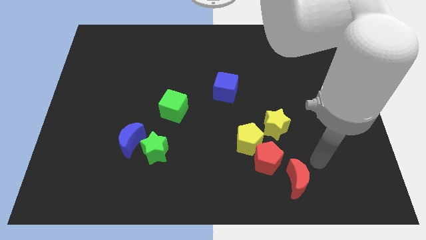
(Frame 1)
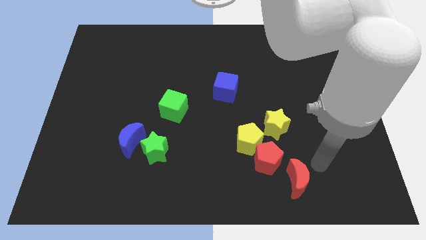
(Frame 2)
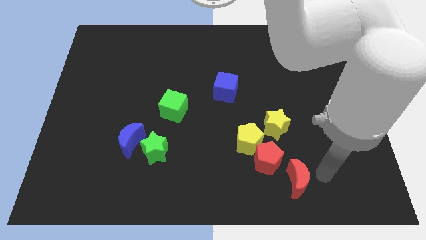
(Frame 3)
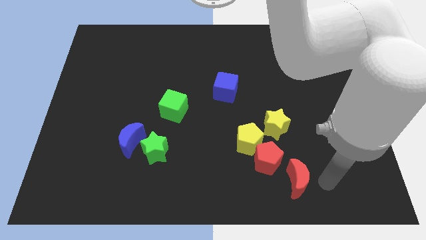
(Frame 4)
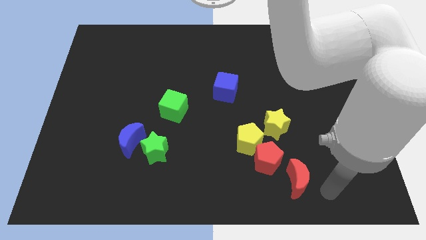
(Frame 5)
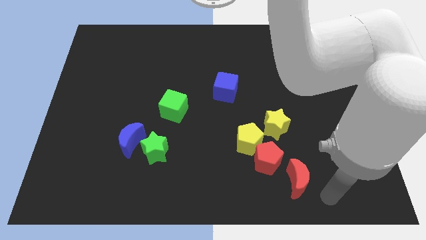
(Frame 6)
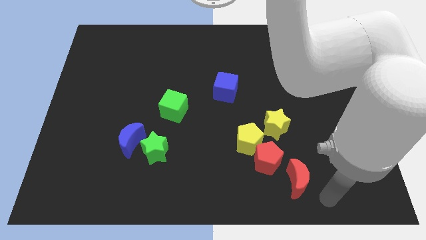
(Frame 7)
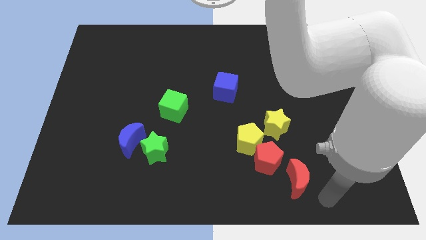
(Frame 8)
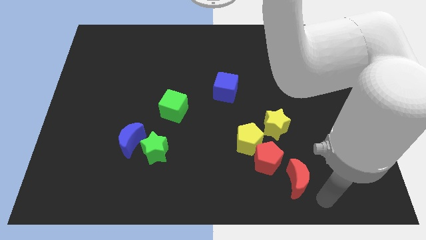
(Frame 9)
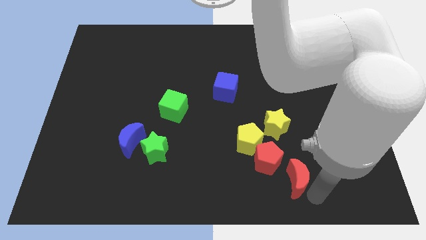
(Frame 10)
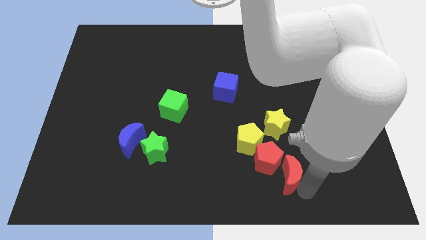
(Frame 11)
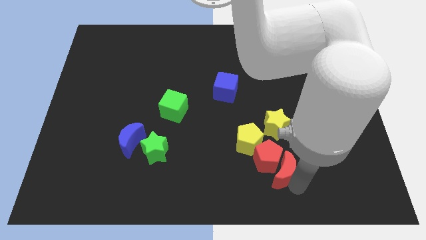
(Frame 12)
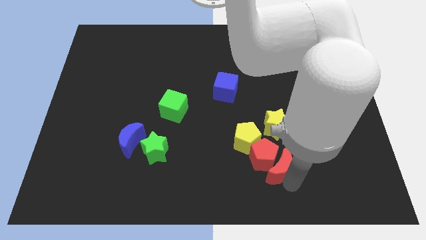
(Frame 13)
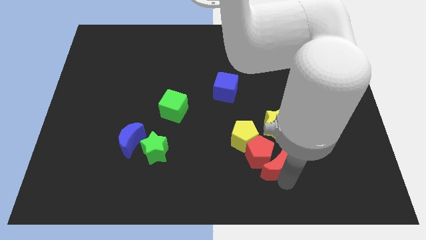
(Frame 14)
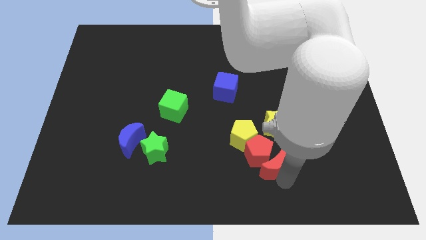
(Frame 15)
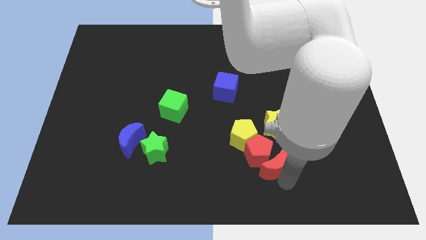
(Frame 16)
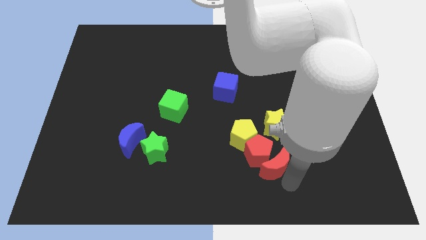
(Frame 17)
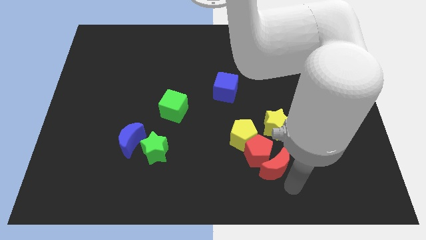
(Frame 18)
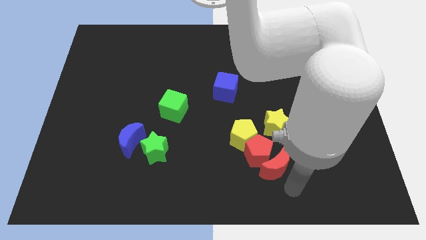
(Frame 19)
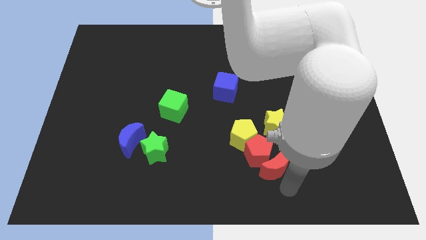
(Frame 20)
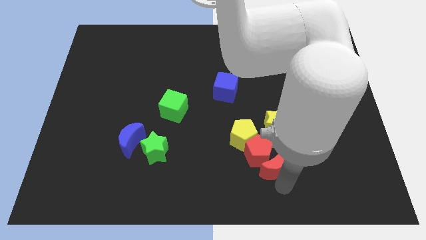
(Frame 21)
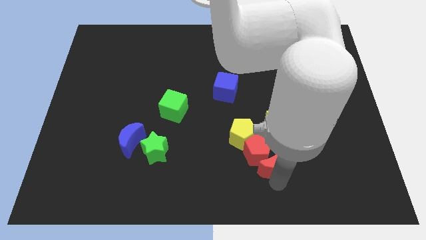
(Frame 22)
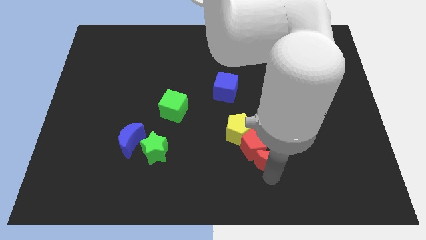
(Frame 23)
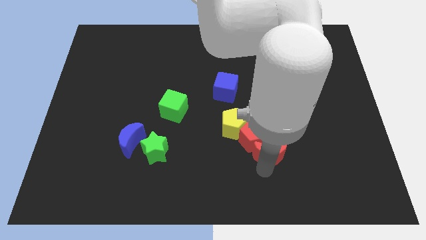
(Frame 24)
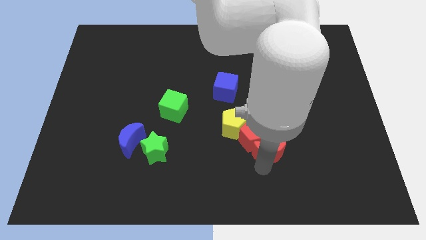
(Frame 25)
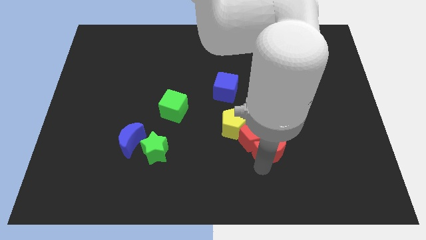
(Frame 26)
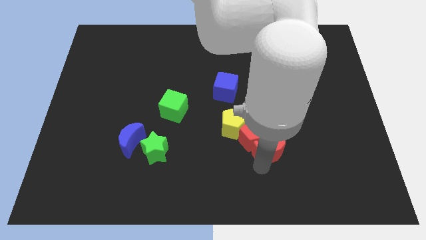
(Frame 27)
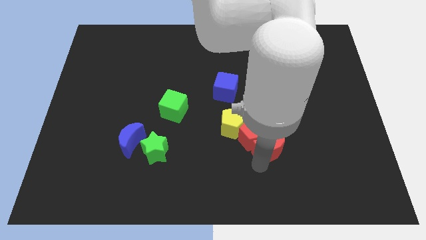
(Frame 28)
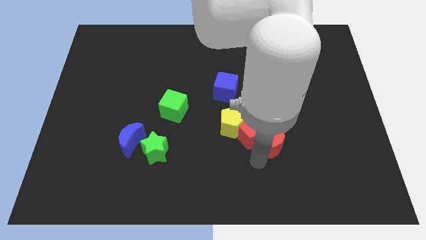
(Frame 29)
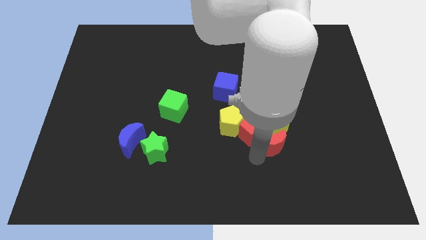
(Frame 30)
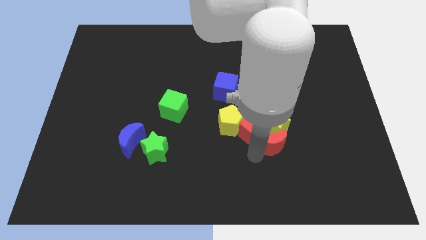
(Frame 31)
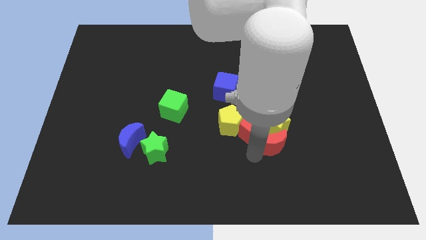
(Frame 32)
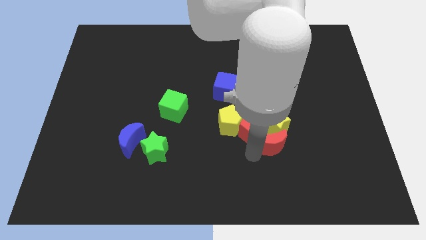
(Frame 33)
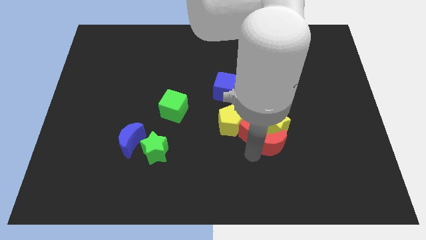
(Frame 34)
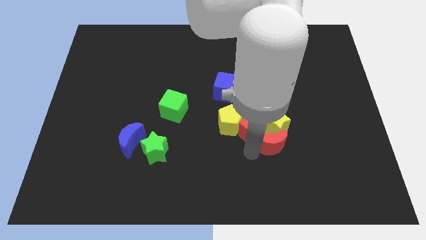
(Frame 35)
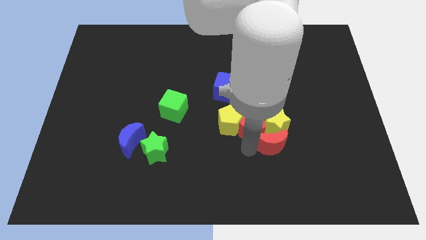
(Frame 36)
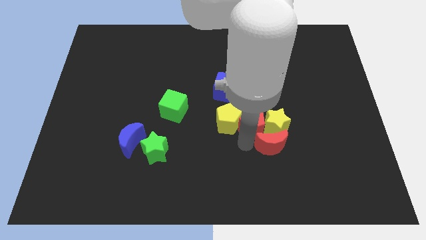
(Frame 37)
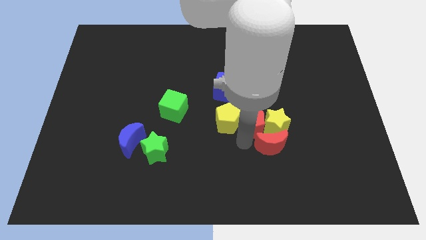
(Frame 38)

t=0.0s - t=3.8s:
push the red blocks between yellow blocks

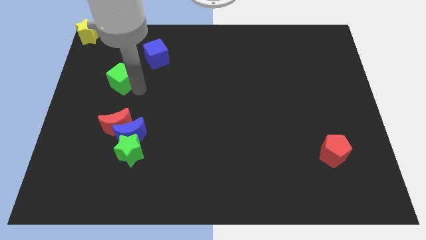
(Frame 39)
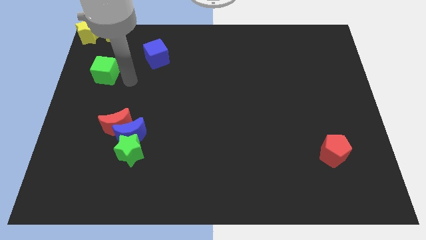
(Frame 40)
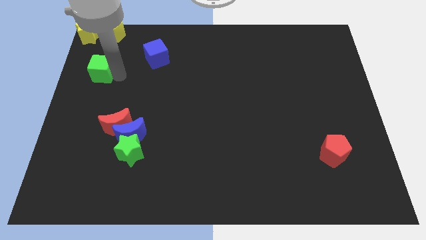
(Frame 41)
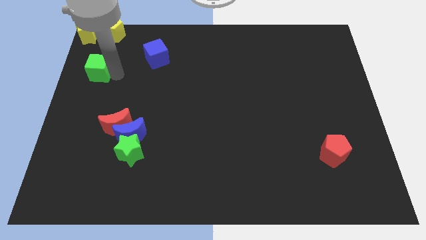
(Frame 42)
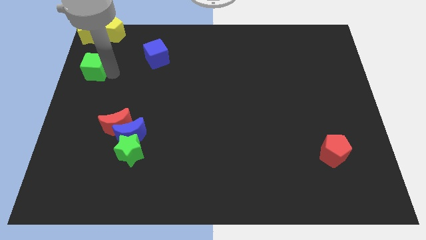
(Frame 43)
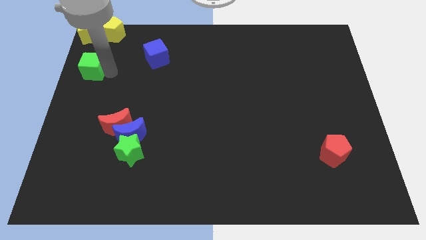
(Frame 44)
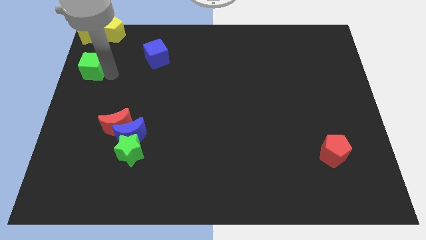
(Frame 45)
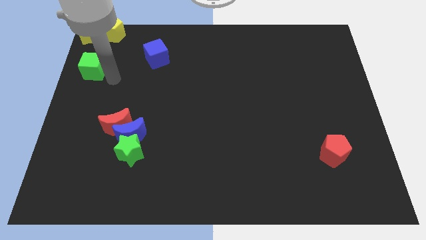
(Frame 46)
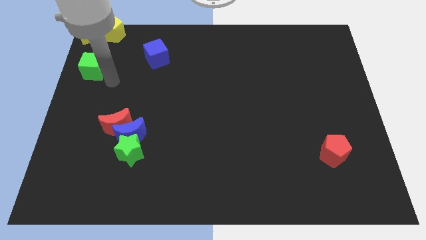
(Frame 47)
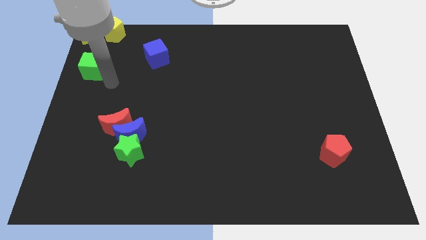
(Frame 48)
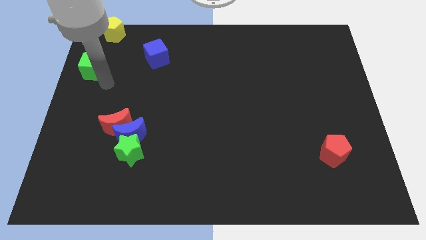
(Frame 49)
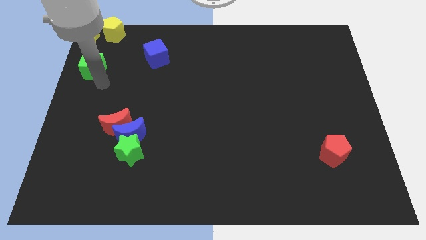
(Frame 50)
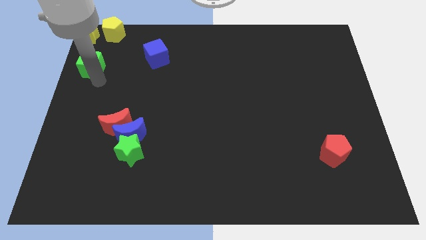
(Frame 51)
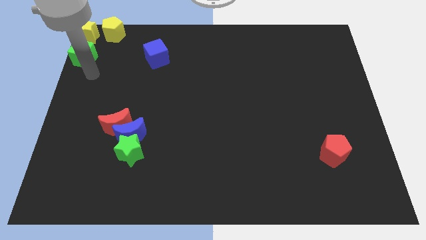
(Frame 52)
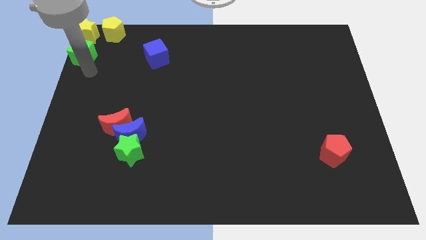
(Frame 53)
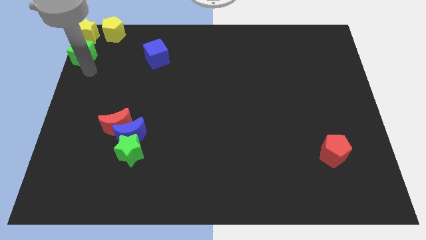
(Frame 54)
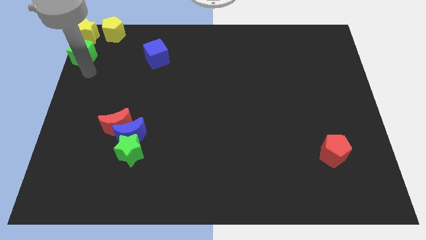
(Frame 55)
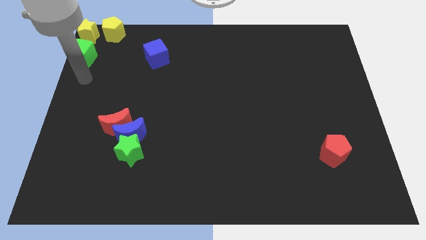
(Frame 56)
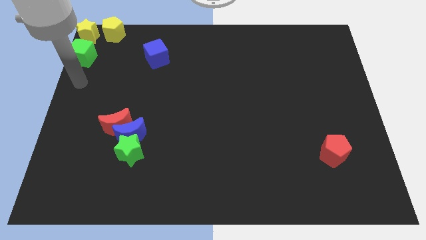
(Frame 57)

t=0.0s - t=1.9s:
move the green cube close to the yellow star

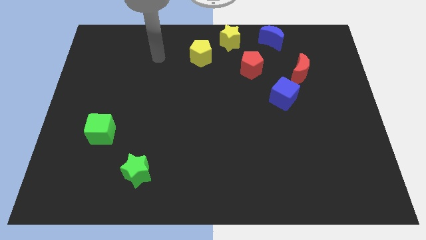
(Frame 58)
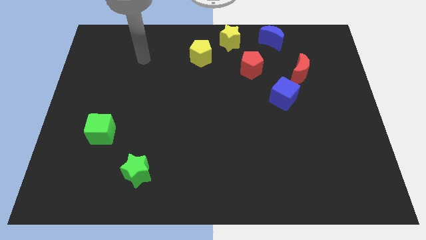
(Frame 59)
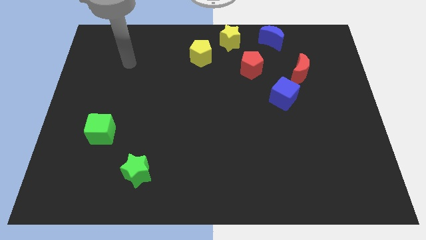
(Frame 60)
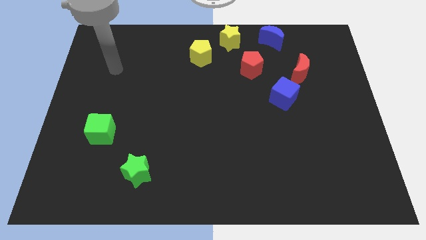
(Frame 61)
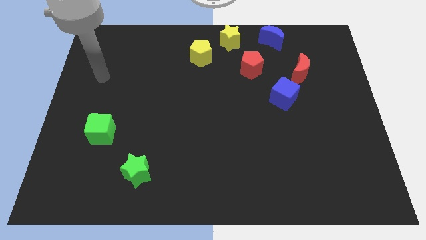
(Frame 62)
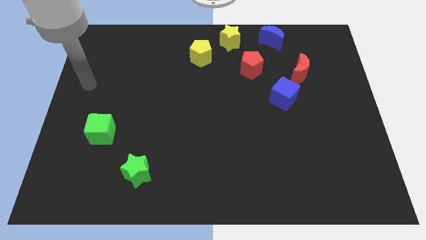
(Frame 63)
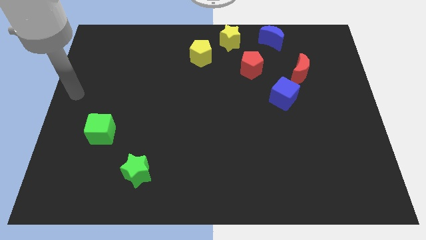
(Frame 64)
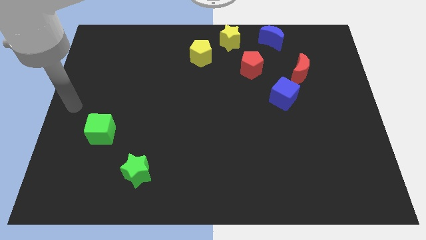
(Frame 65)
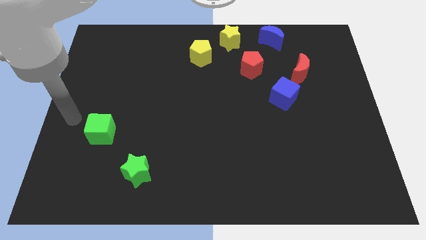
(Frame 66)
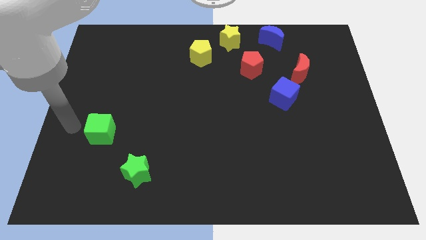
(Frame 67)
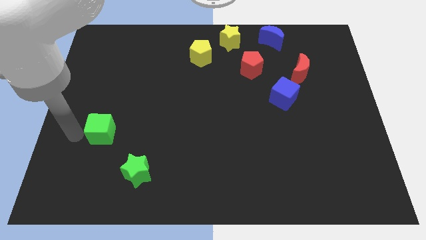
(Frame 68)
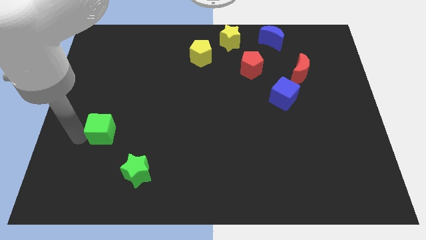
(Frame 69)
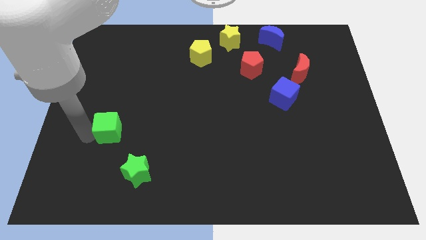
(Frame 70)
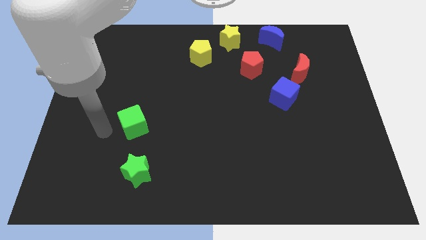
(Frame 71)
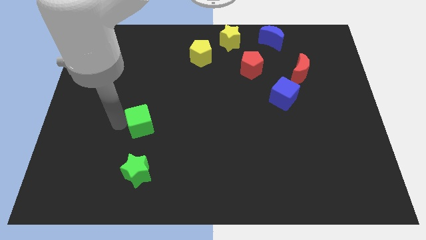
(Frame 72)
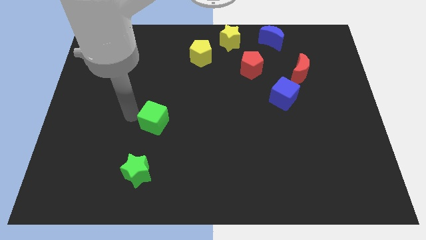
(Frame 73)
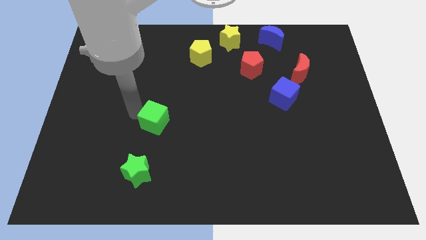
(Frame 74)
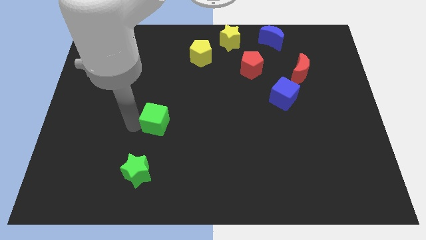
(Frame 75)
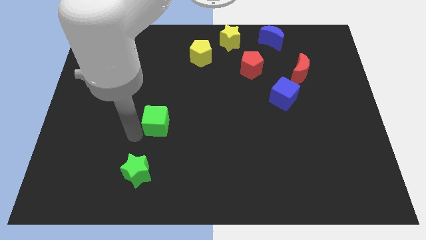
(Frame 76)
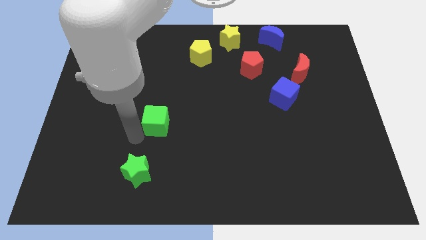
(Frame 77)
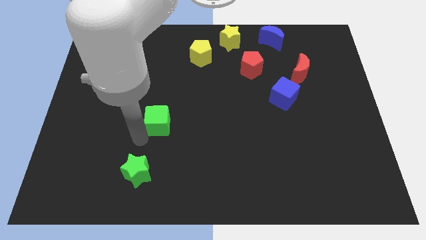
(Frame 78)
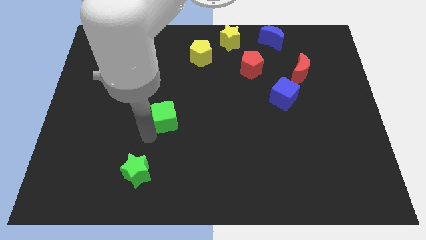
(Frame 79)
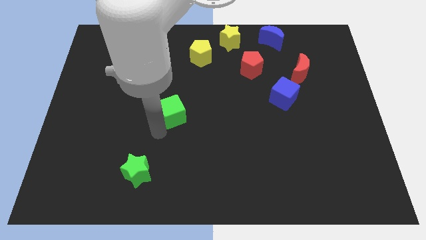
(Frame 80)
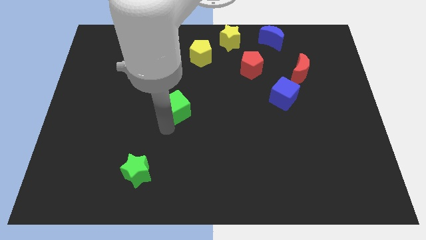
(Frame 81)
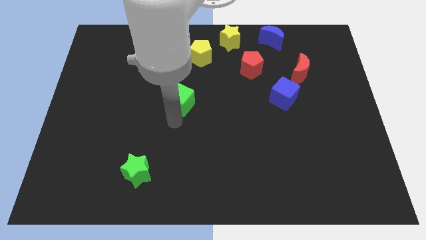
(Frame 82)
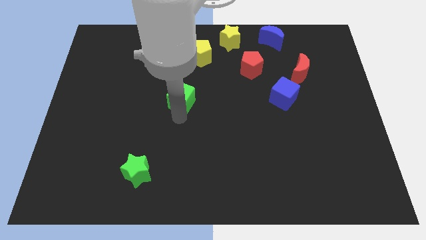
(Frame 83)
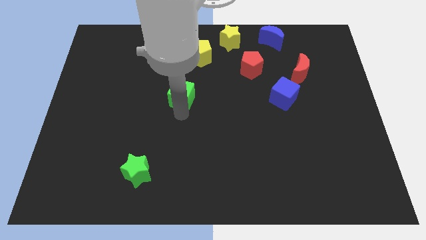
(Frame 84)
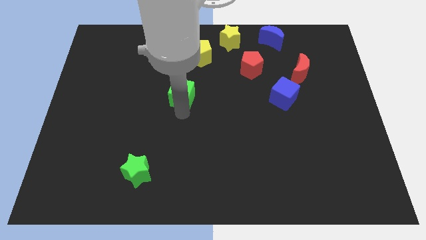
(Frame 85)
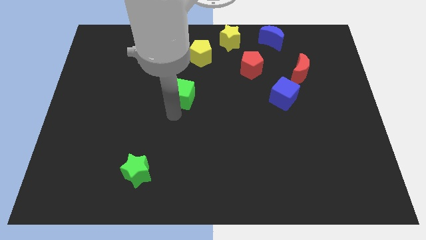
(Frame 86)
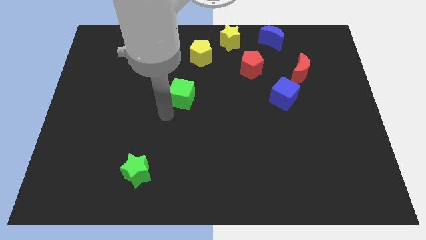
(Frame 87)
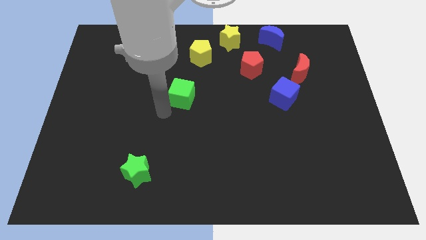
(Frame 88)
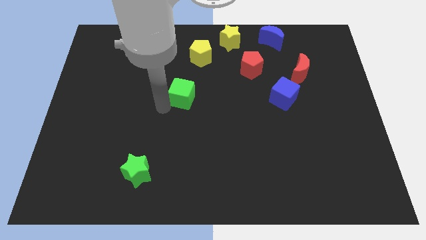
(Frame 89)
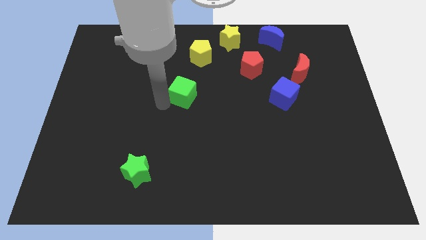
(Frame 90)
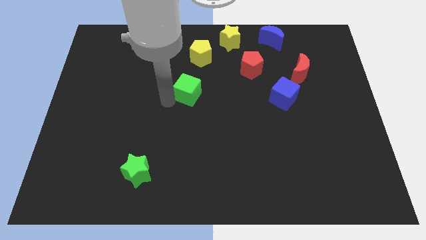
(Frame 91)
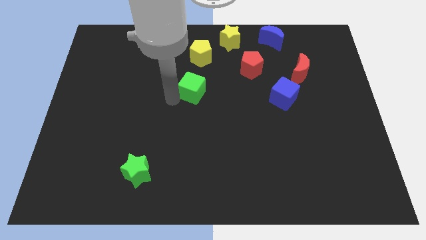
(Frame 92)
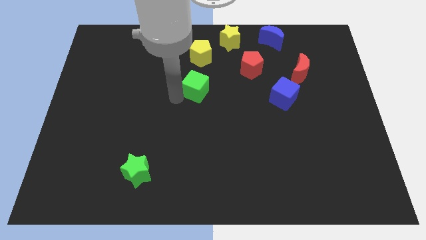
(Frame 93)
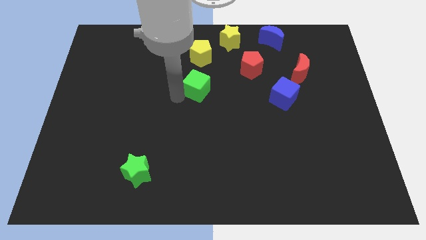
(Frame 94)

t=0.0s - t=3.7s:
move the green cube to the bottom of the yellow pentagon
